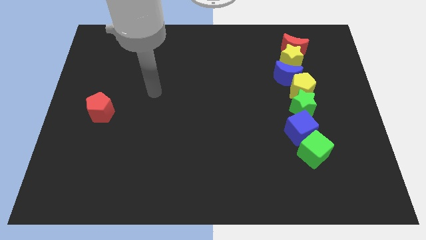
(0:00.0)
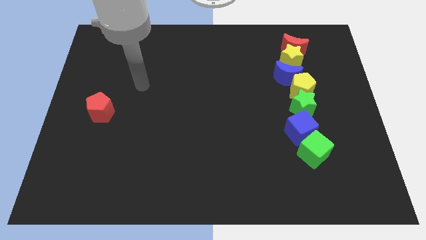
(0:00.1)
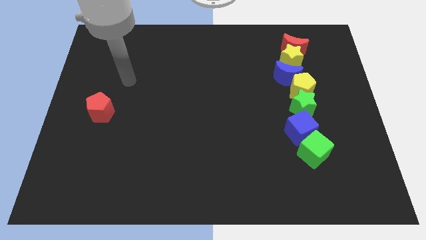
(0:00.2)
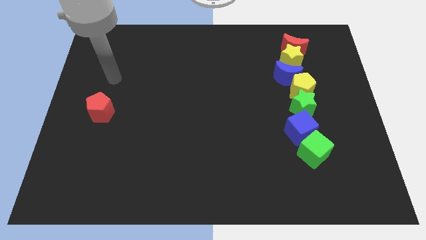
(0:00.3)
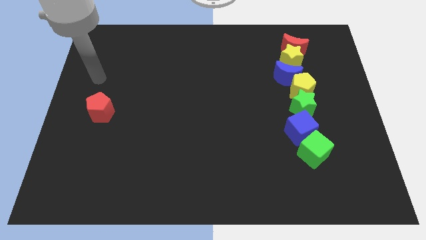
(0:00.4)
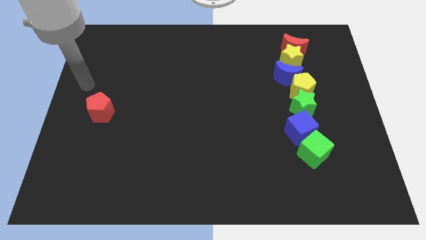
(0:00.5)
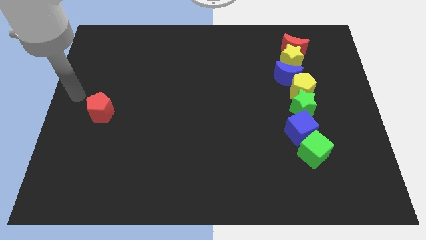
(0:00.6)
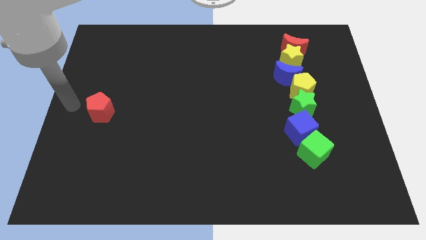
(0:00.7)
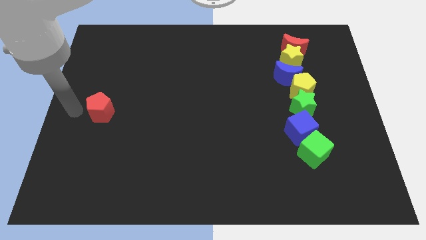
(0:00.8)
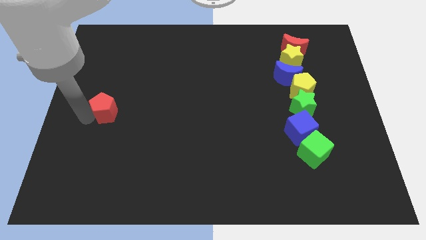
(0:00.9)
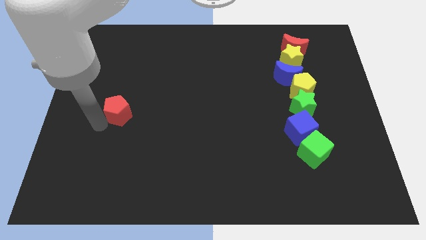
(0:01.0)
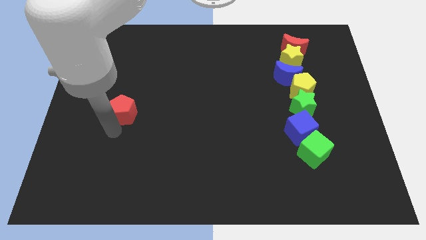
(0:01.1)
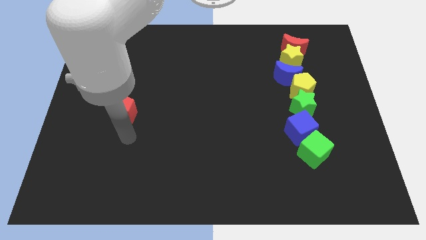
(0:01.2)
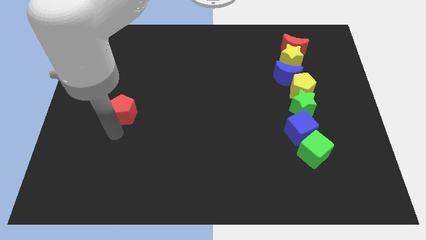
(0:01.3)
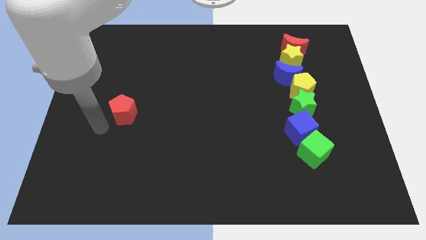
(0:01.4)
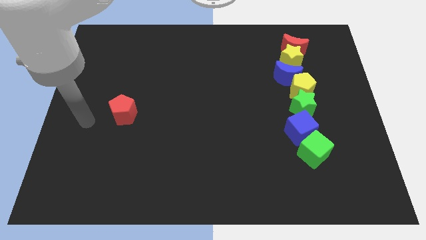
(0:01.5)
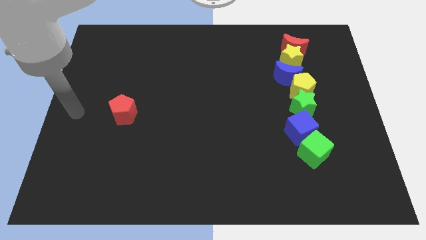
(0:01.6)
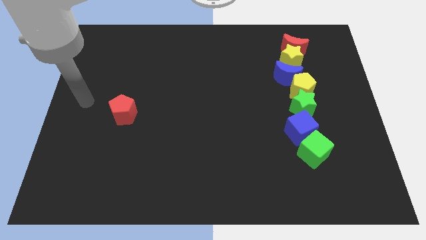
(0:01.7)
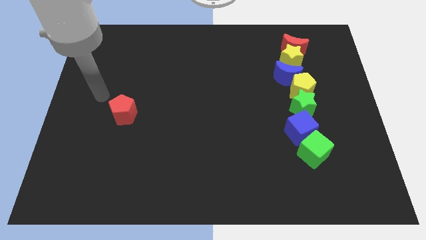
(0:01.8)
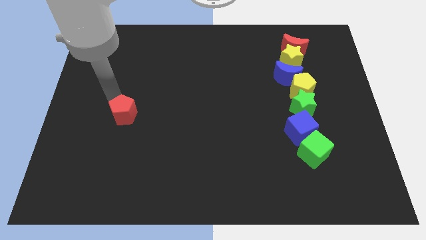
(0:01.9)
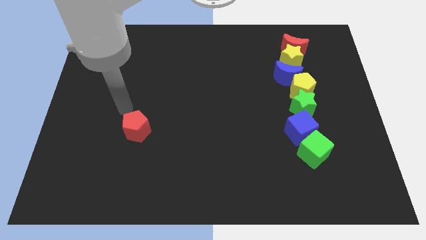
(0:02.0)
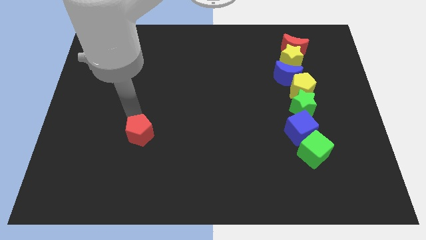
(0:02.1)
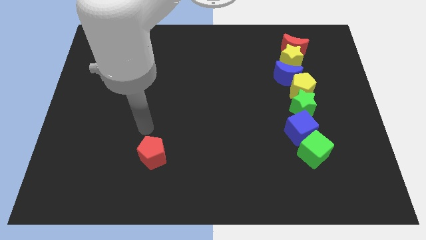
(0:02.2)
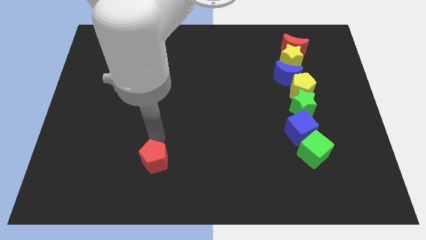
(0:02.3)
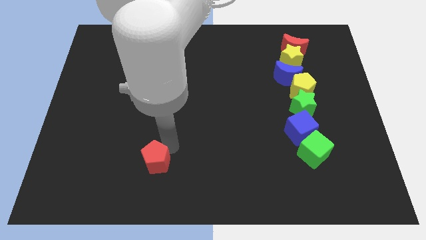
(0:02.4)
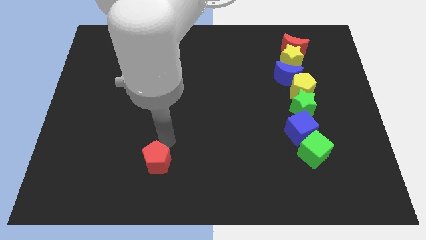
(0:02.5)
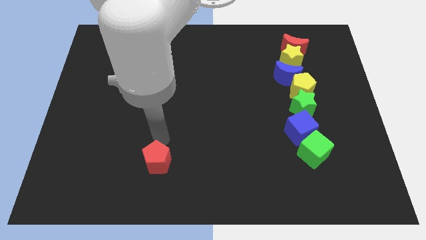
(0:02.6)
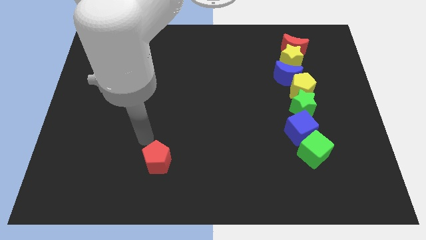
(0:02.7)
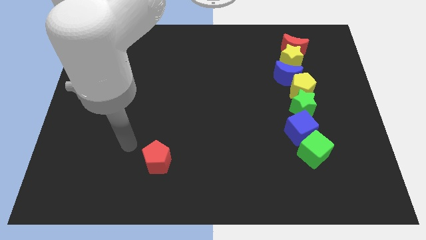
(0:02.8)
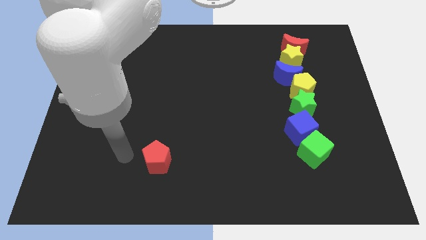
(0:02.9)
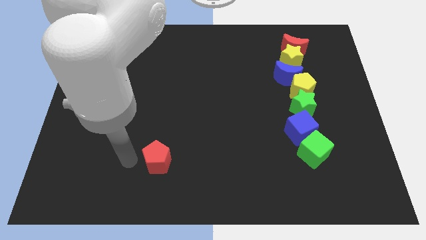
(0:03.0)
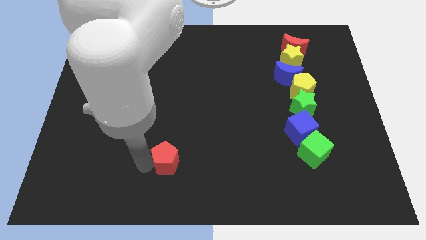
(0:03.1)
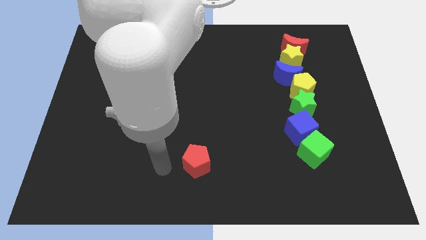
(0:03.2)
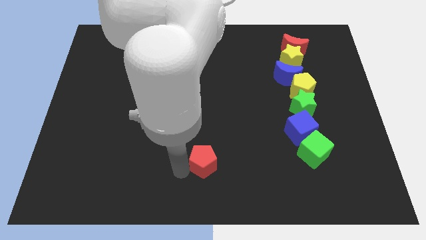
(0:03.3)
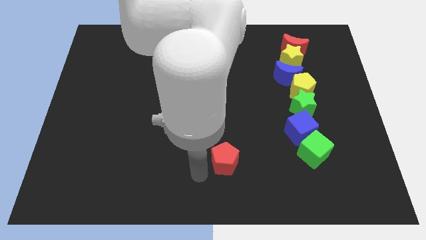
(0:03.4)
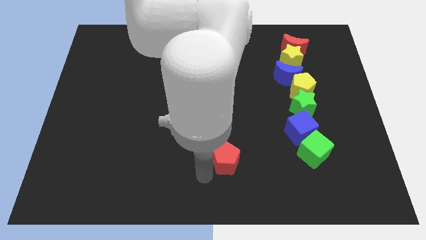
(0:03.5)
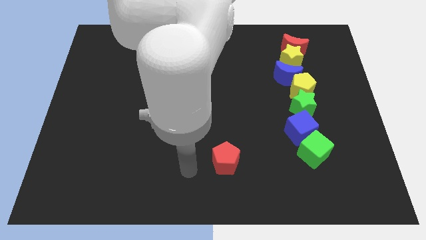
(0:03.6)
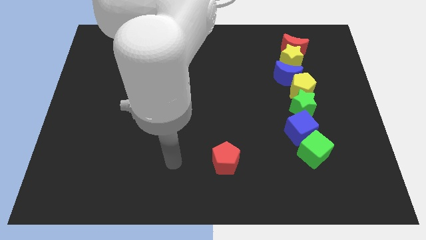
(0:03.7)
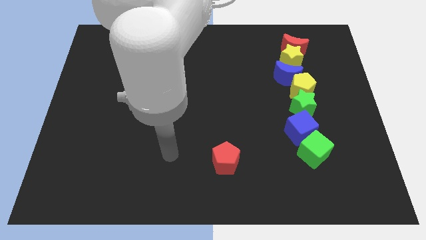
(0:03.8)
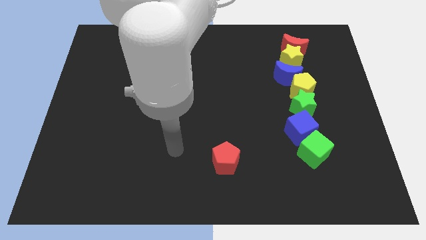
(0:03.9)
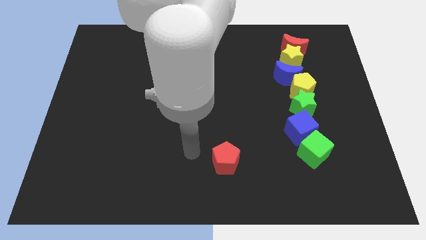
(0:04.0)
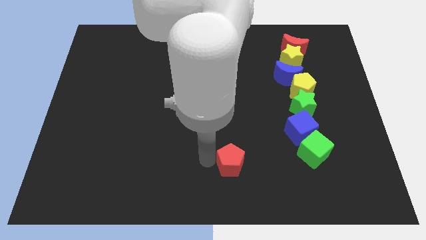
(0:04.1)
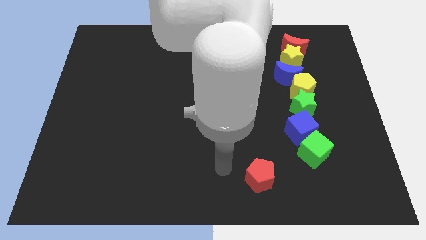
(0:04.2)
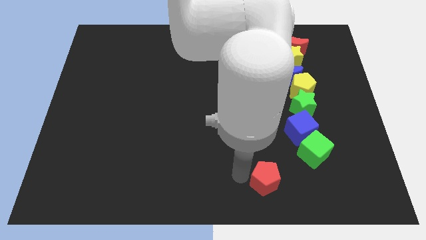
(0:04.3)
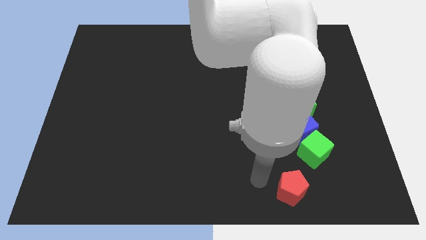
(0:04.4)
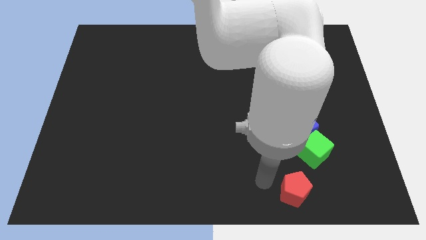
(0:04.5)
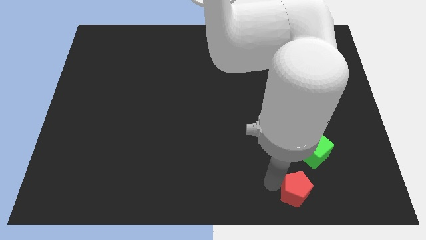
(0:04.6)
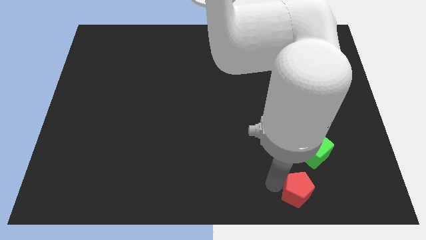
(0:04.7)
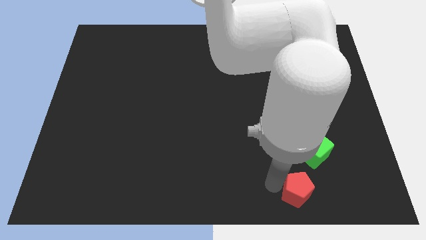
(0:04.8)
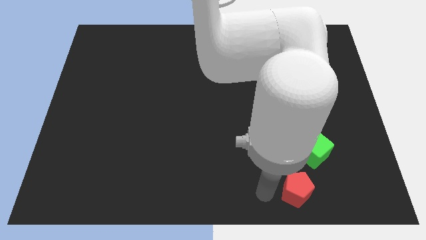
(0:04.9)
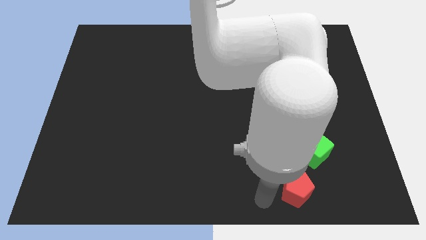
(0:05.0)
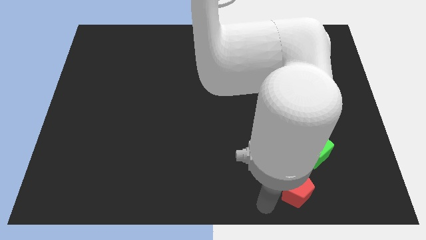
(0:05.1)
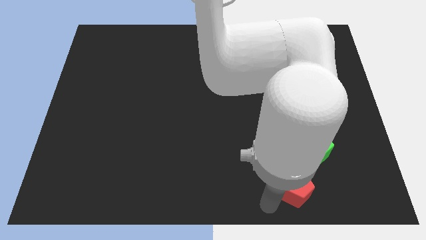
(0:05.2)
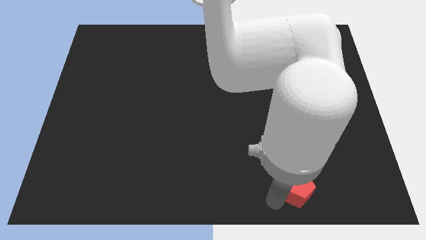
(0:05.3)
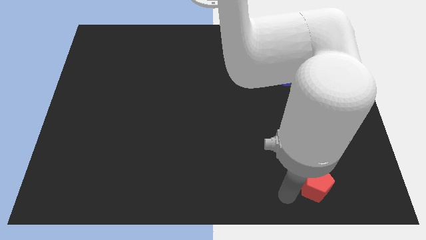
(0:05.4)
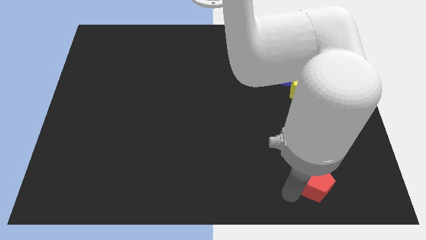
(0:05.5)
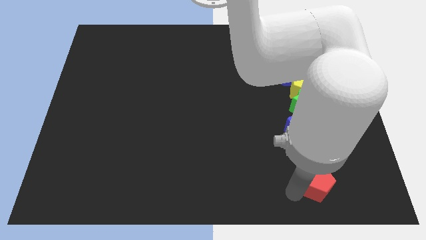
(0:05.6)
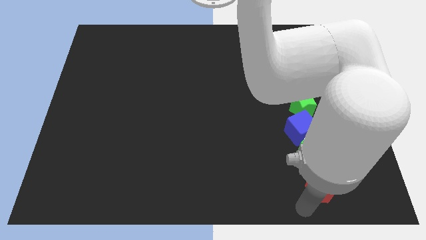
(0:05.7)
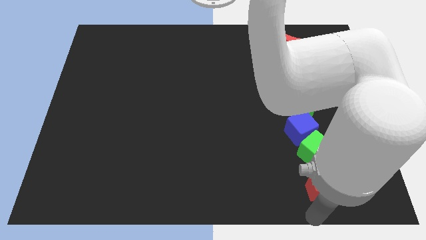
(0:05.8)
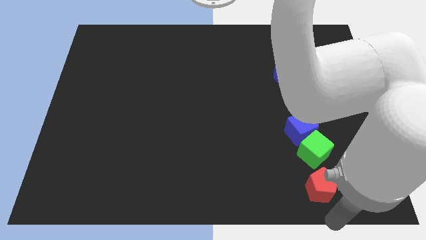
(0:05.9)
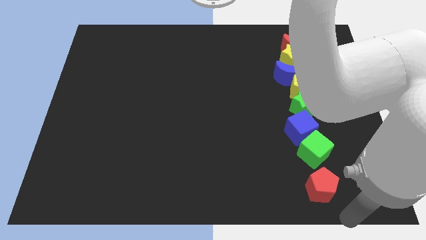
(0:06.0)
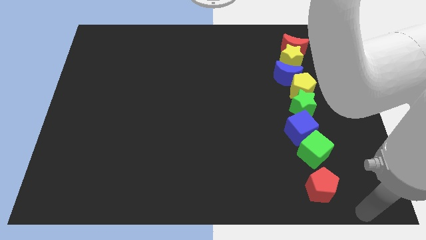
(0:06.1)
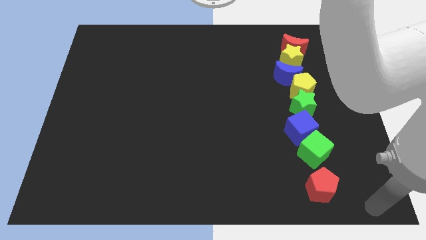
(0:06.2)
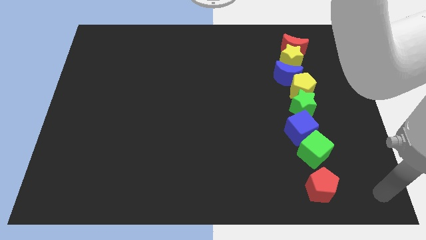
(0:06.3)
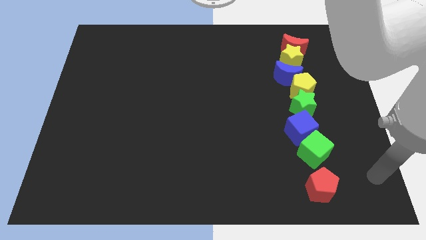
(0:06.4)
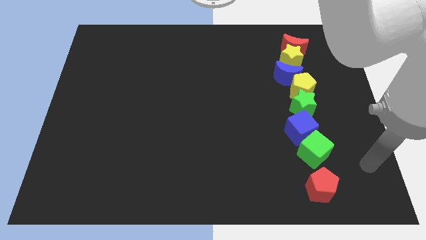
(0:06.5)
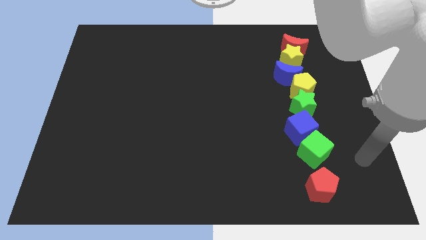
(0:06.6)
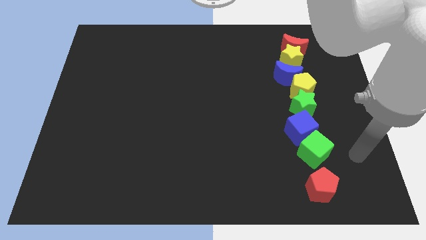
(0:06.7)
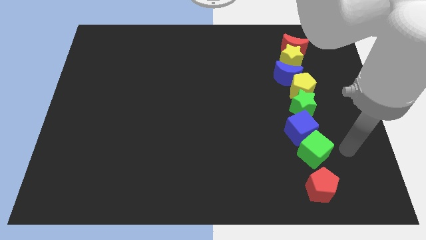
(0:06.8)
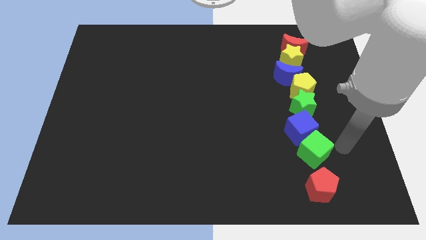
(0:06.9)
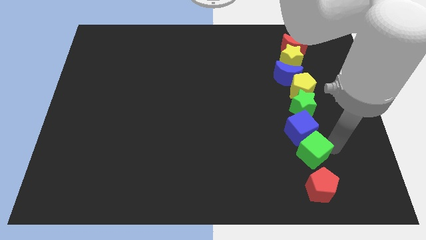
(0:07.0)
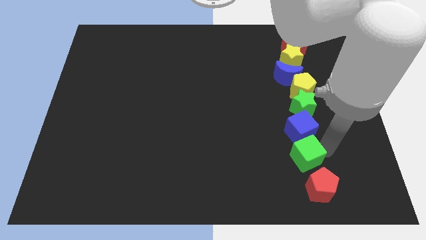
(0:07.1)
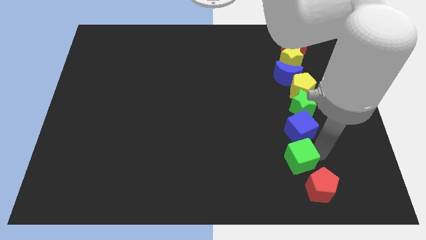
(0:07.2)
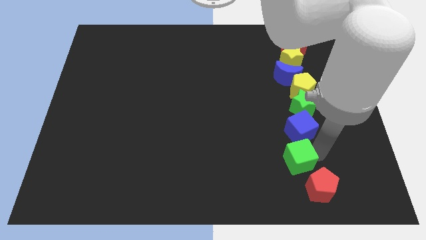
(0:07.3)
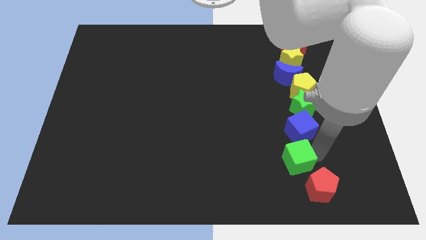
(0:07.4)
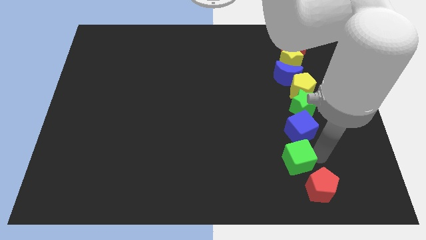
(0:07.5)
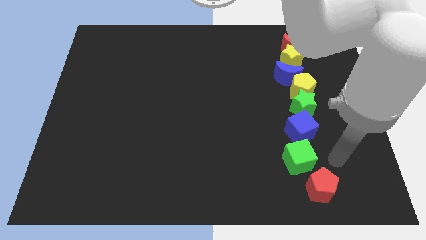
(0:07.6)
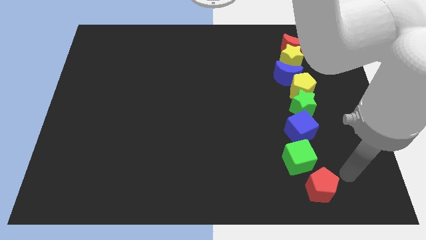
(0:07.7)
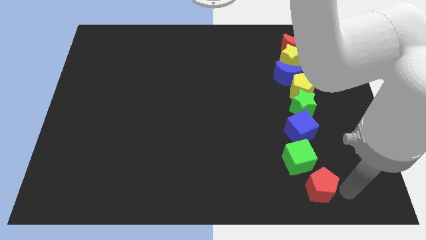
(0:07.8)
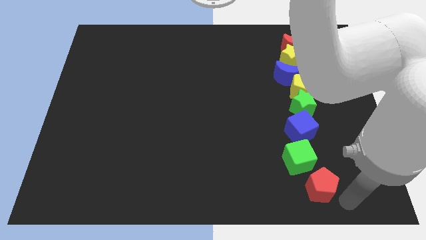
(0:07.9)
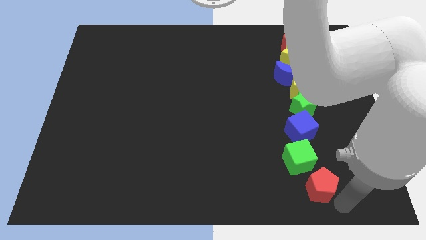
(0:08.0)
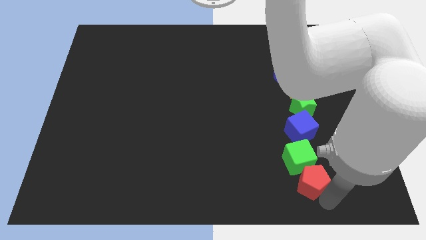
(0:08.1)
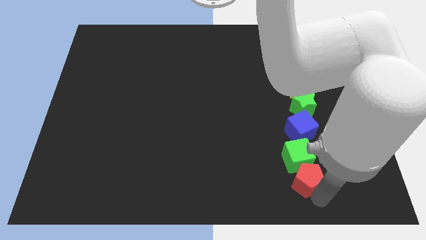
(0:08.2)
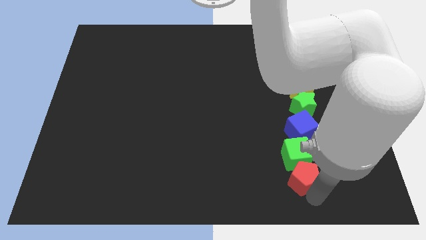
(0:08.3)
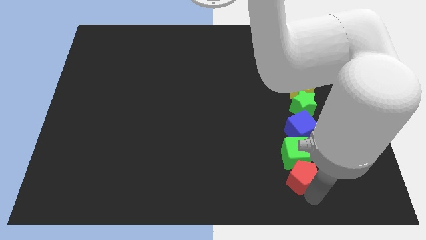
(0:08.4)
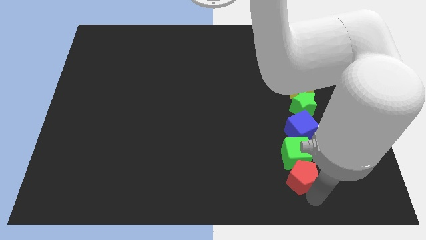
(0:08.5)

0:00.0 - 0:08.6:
adjust the green cube and red pentagon

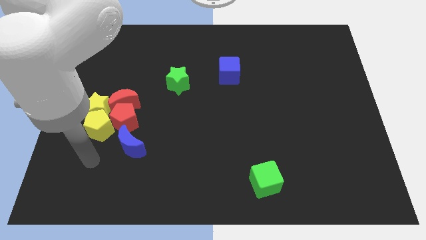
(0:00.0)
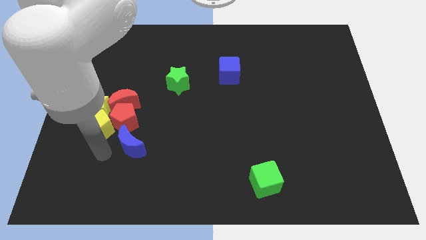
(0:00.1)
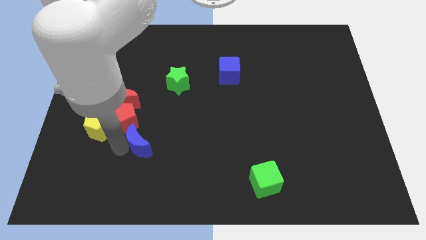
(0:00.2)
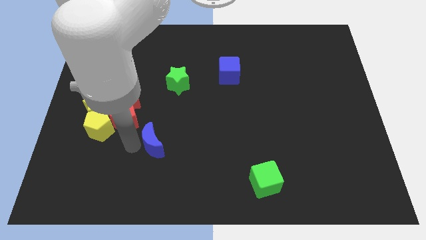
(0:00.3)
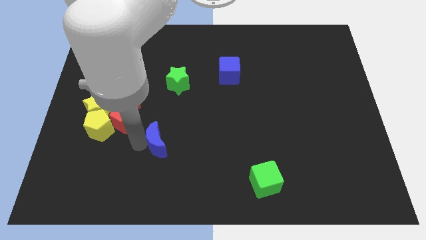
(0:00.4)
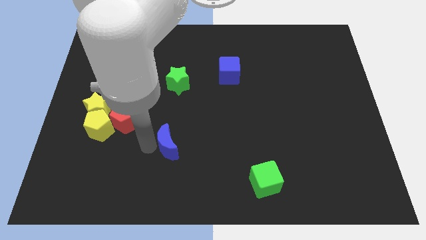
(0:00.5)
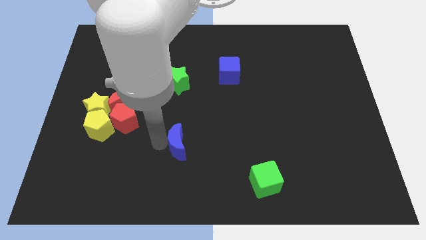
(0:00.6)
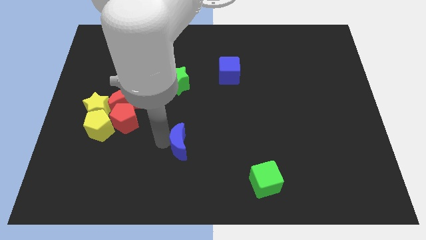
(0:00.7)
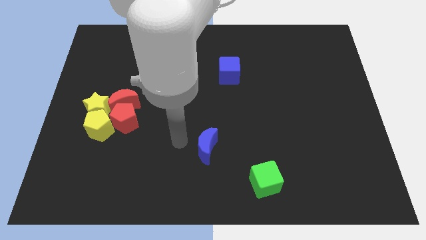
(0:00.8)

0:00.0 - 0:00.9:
place the blue moon below the green star
